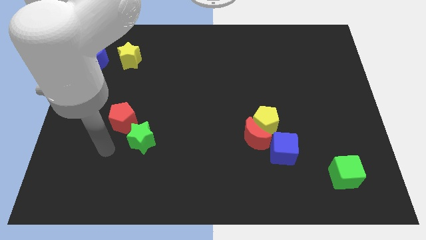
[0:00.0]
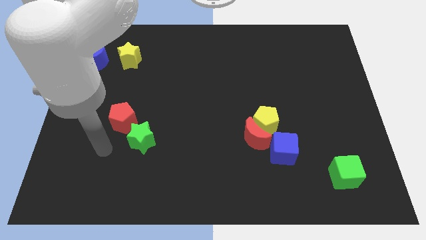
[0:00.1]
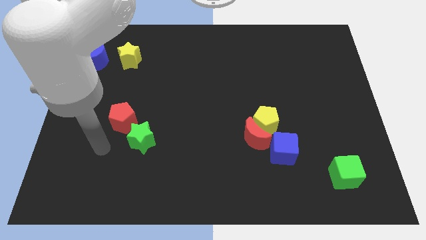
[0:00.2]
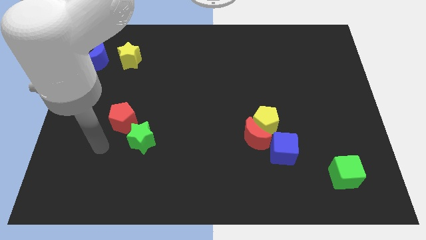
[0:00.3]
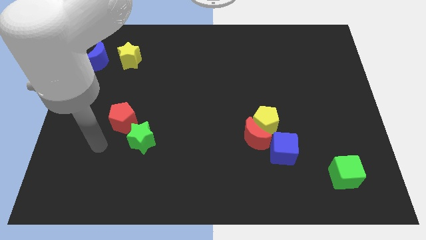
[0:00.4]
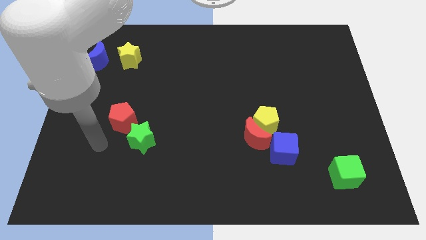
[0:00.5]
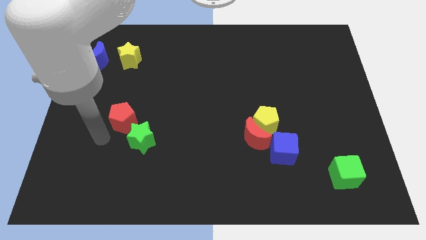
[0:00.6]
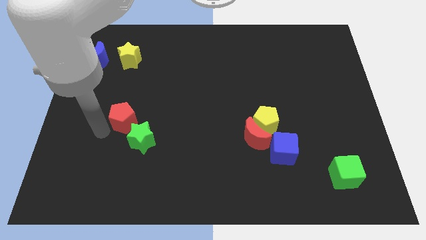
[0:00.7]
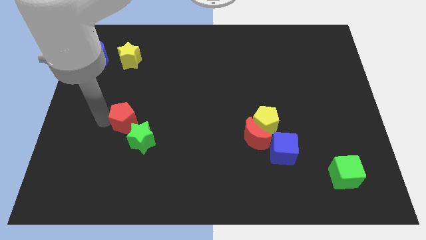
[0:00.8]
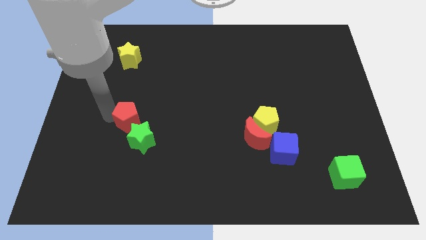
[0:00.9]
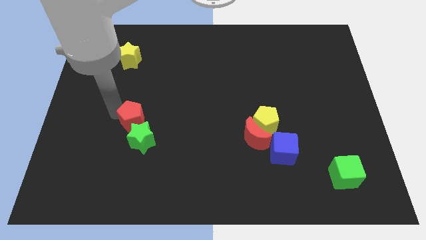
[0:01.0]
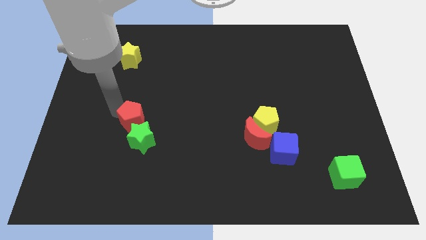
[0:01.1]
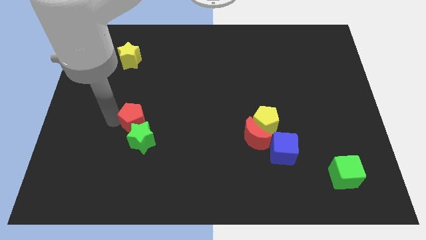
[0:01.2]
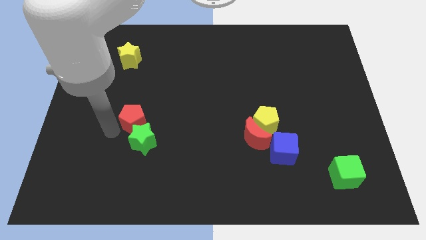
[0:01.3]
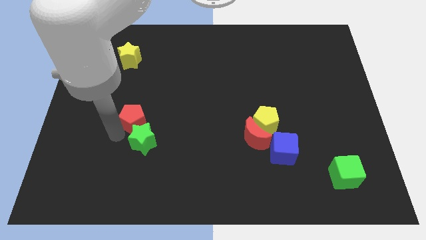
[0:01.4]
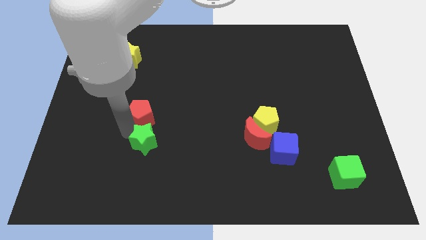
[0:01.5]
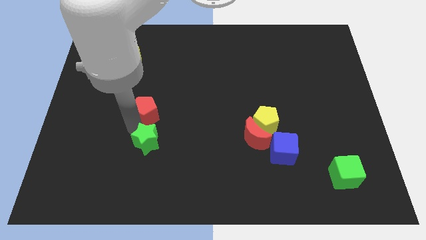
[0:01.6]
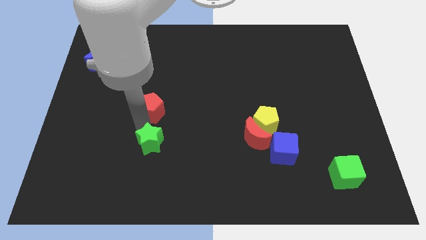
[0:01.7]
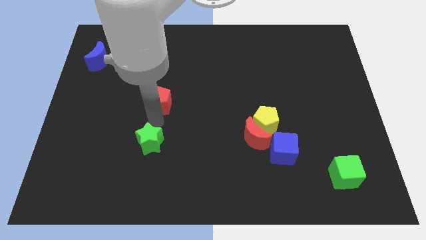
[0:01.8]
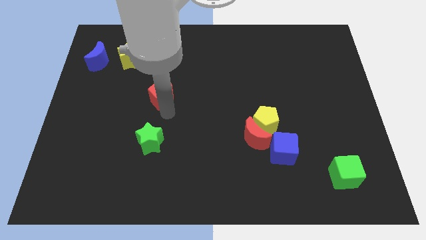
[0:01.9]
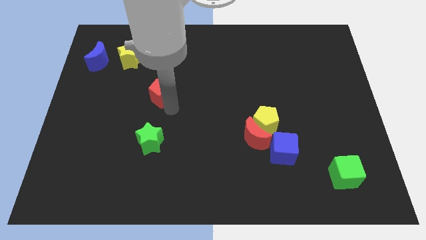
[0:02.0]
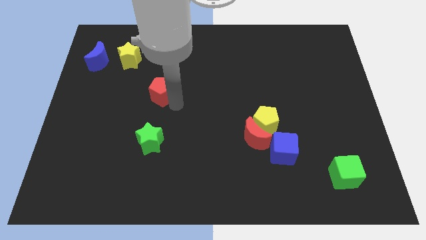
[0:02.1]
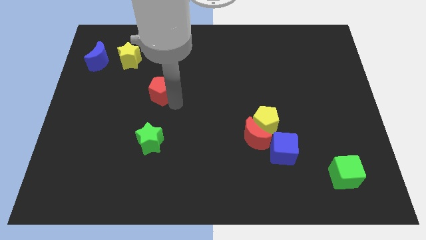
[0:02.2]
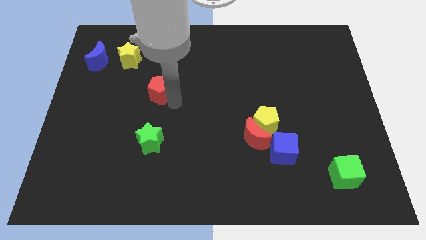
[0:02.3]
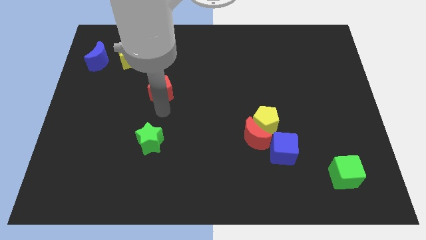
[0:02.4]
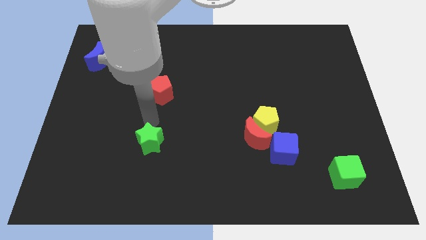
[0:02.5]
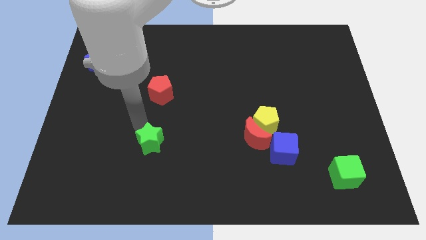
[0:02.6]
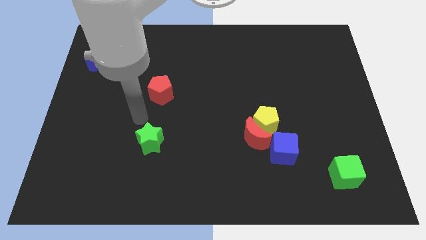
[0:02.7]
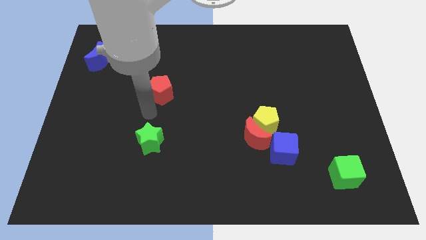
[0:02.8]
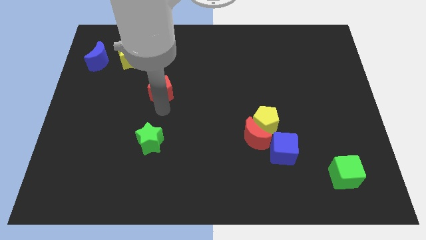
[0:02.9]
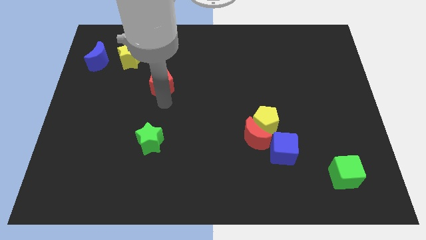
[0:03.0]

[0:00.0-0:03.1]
move red pentagon at bottom right to yellow star

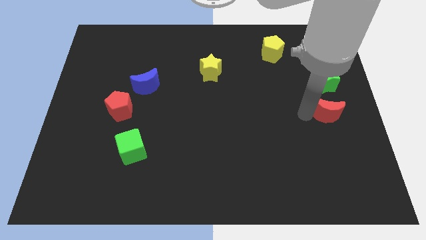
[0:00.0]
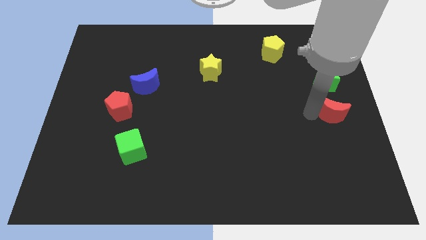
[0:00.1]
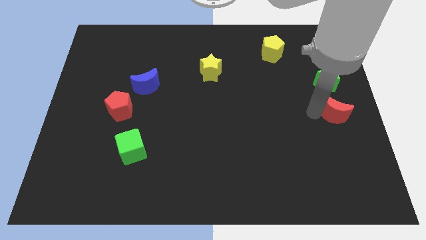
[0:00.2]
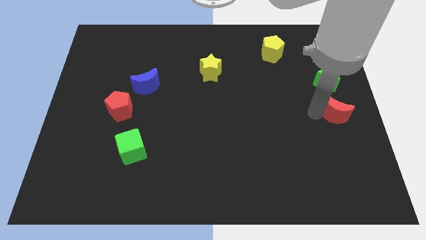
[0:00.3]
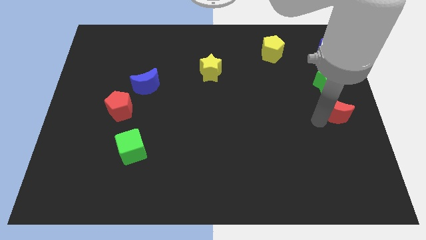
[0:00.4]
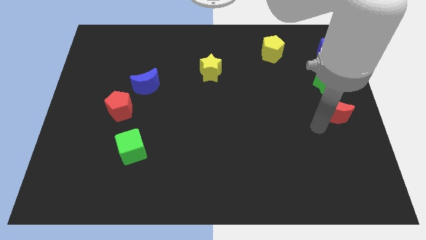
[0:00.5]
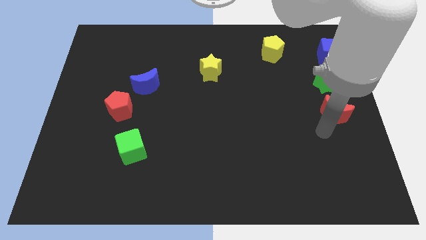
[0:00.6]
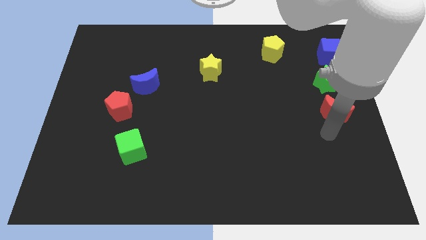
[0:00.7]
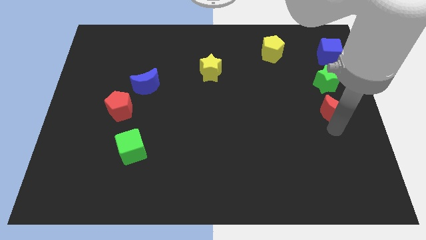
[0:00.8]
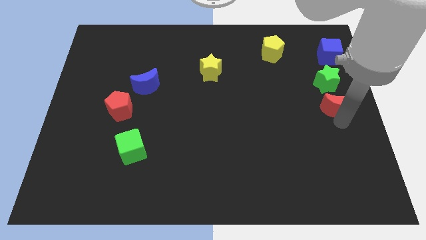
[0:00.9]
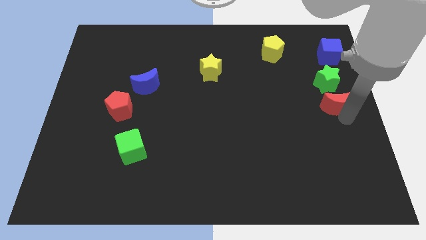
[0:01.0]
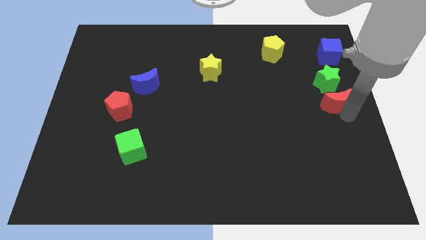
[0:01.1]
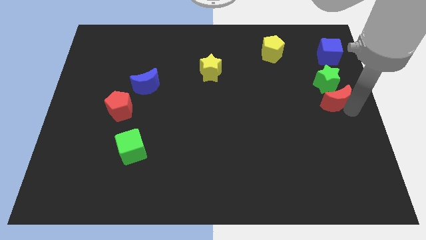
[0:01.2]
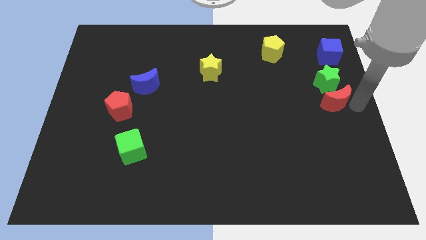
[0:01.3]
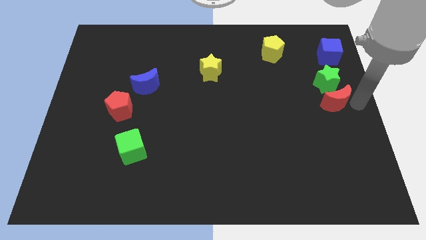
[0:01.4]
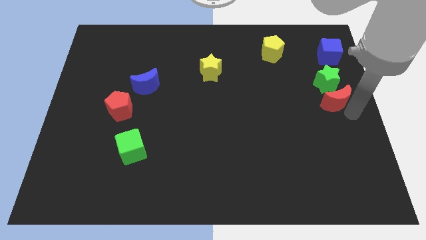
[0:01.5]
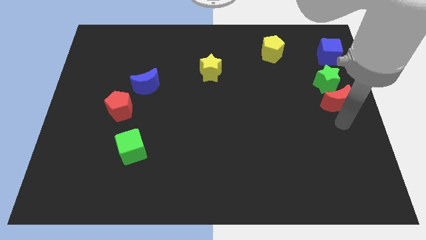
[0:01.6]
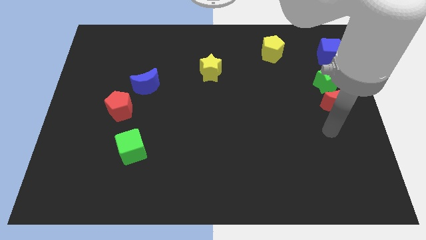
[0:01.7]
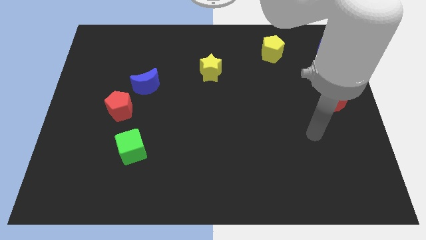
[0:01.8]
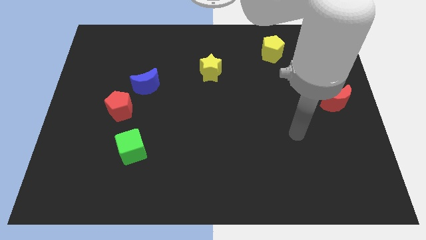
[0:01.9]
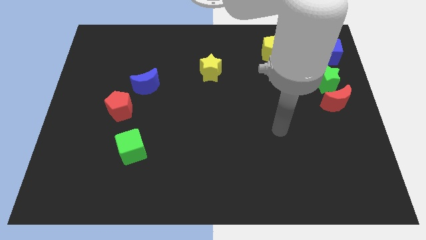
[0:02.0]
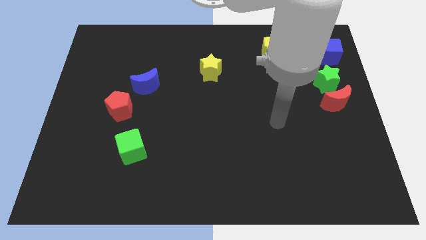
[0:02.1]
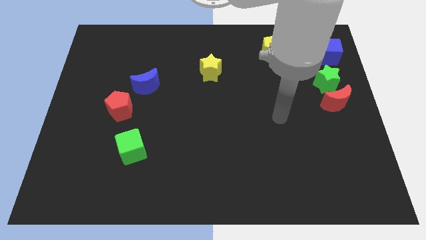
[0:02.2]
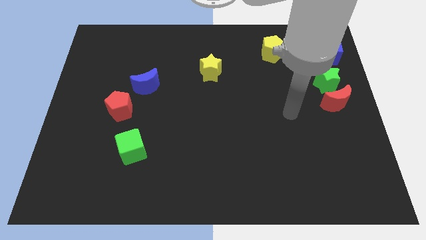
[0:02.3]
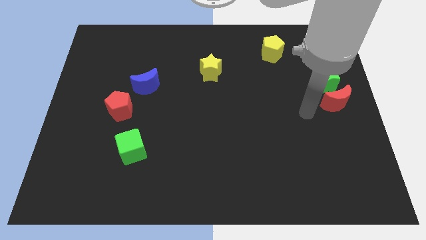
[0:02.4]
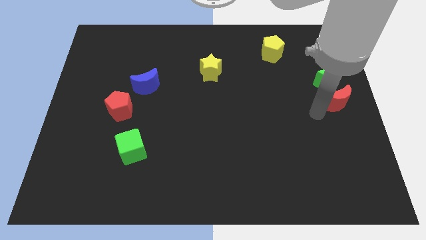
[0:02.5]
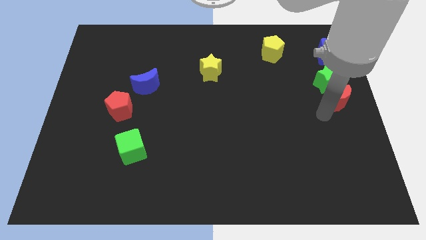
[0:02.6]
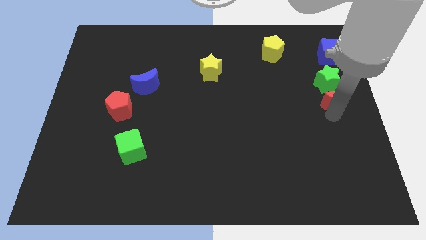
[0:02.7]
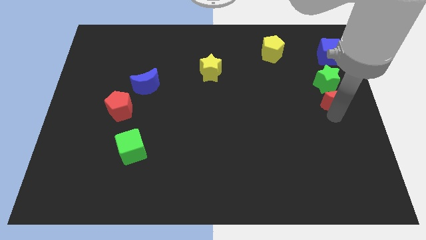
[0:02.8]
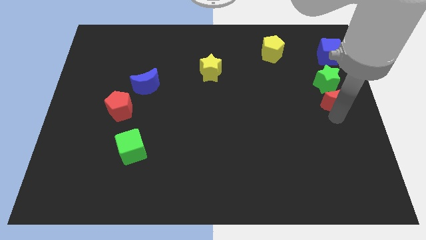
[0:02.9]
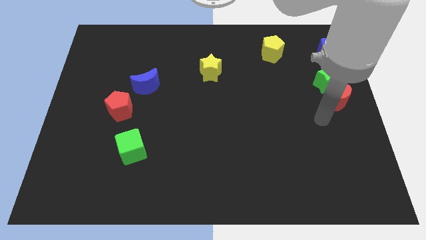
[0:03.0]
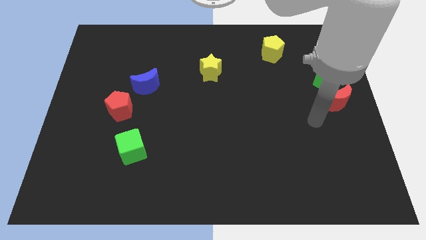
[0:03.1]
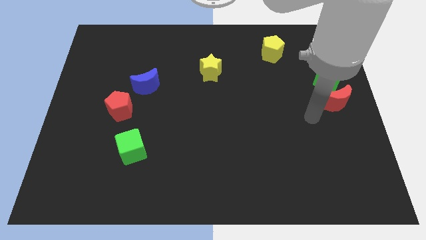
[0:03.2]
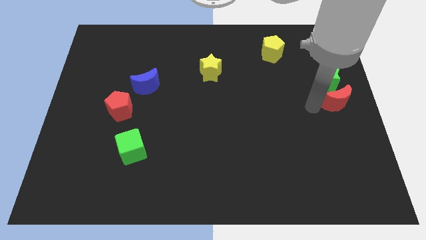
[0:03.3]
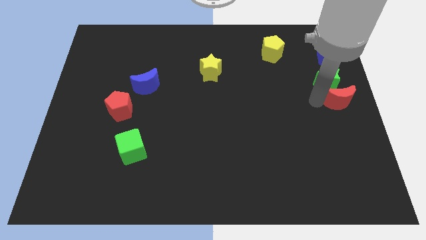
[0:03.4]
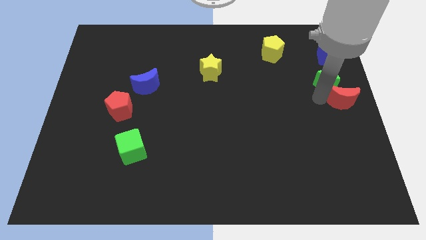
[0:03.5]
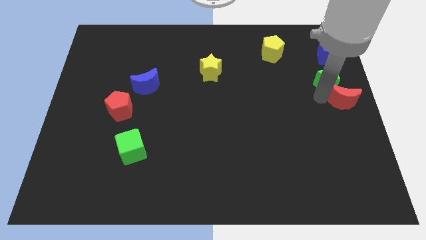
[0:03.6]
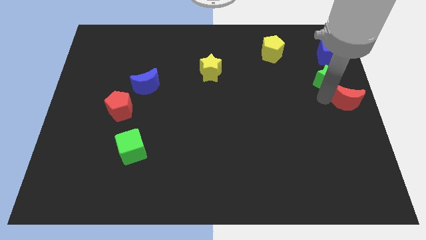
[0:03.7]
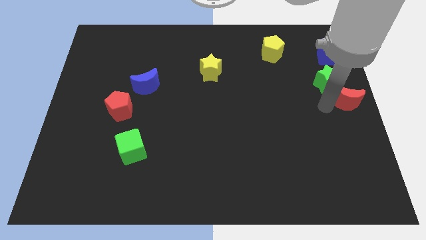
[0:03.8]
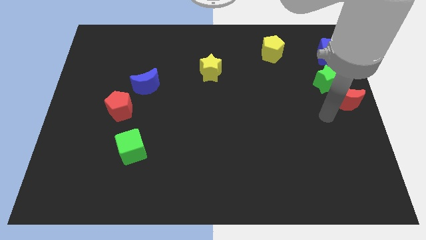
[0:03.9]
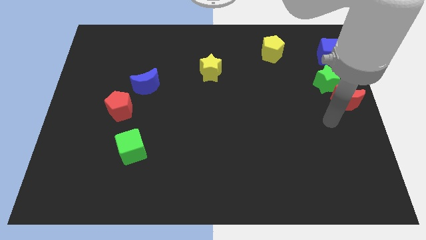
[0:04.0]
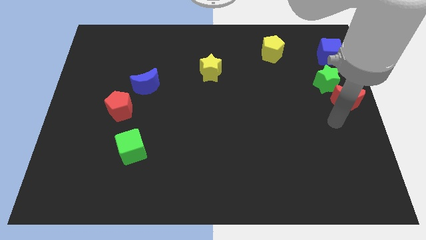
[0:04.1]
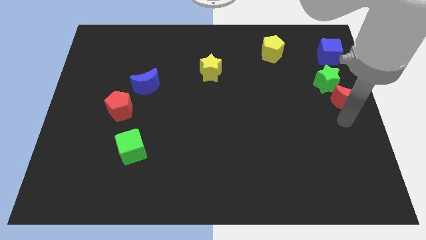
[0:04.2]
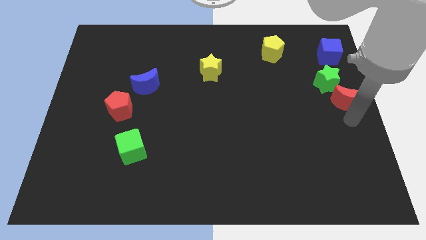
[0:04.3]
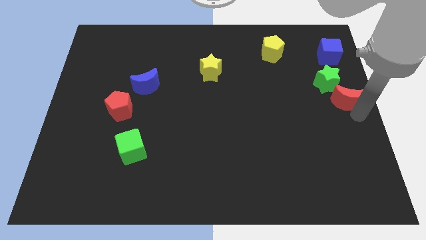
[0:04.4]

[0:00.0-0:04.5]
move the red moon to the center right of the board

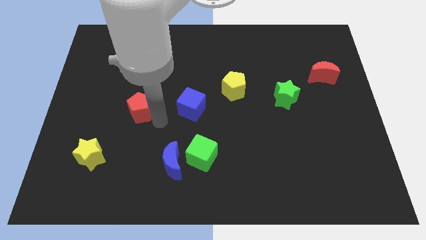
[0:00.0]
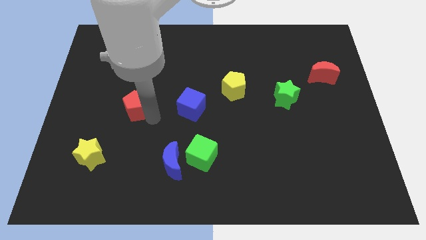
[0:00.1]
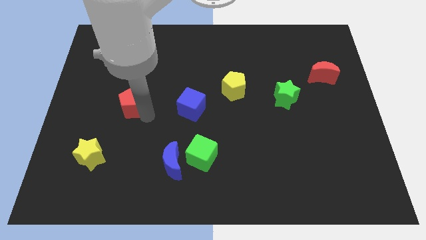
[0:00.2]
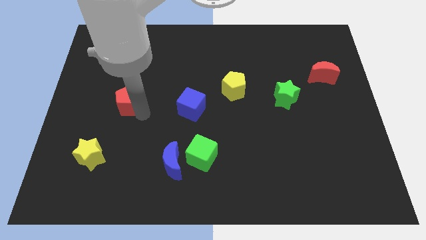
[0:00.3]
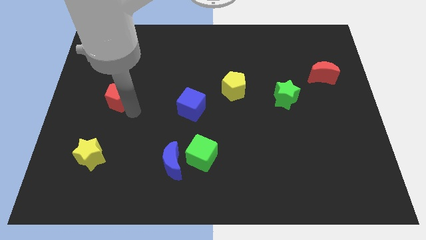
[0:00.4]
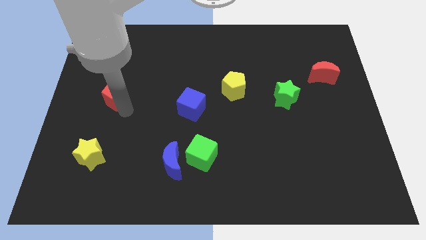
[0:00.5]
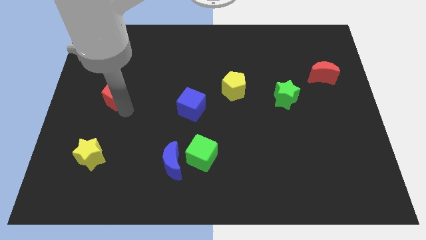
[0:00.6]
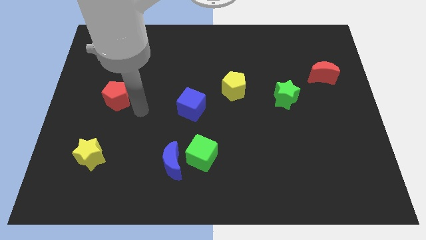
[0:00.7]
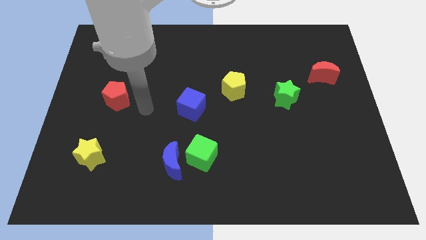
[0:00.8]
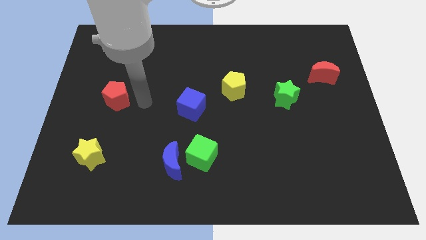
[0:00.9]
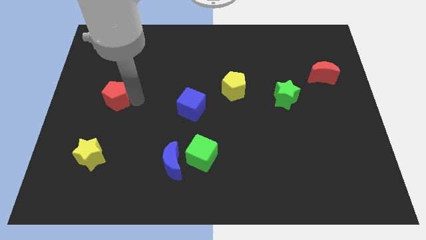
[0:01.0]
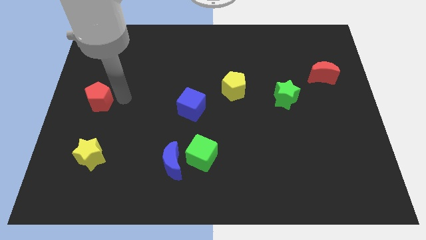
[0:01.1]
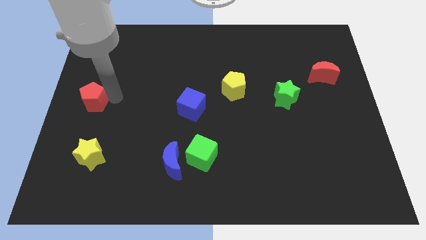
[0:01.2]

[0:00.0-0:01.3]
push the red pentagon towards the center left side of the board

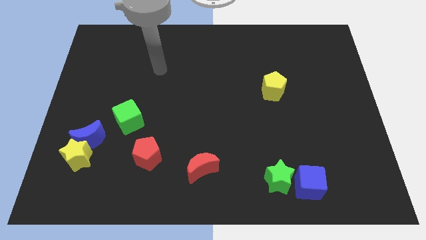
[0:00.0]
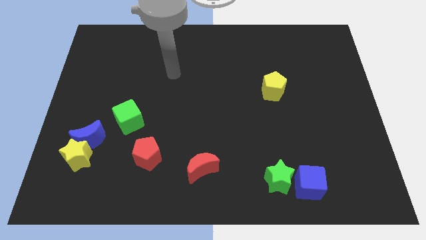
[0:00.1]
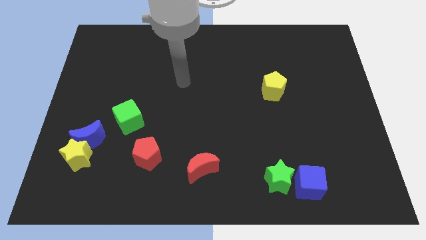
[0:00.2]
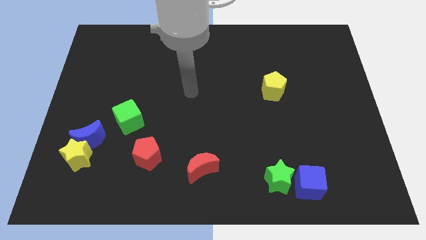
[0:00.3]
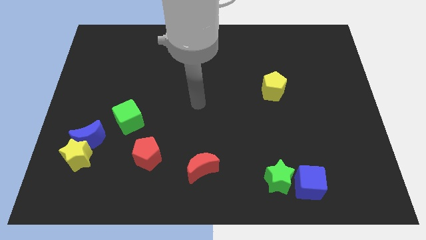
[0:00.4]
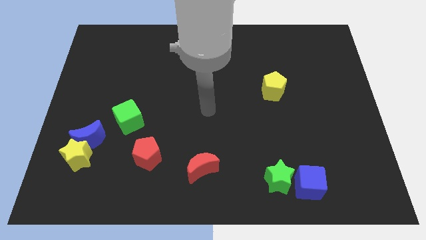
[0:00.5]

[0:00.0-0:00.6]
place arm in center
